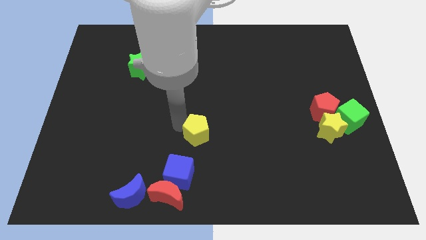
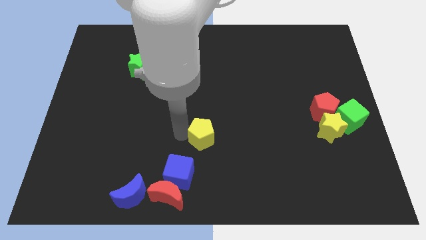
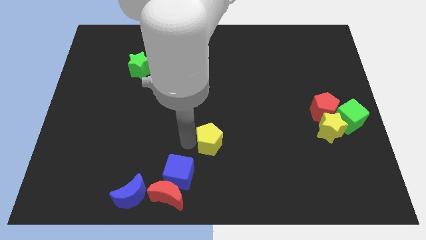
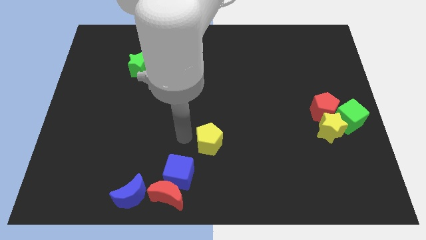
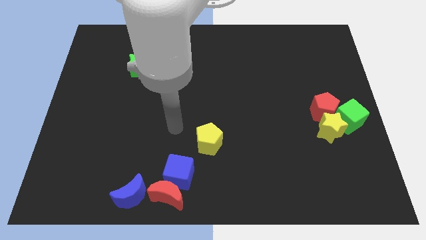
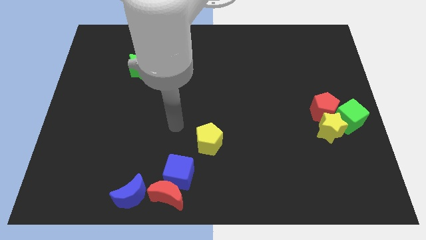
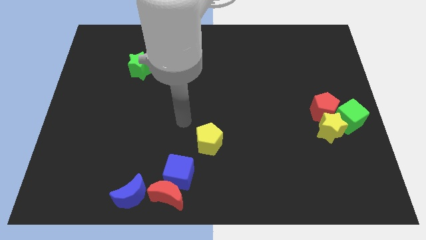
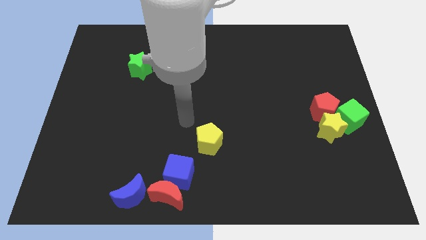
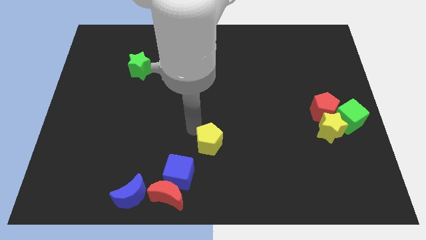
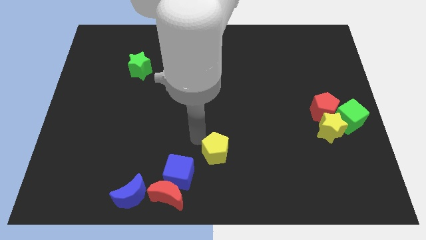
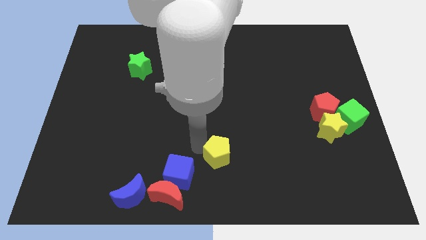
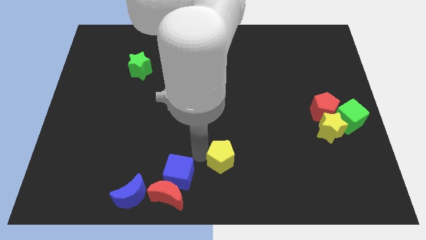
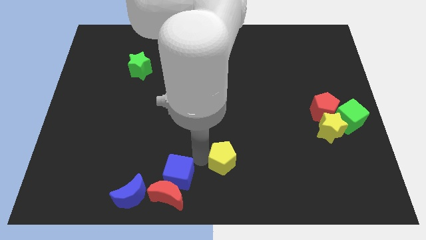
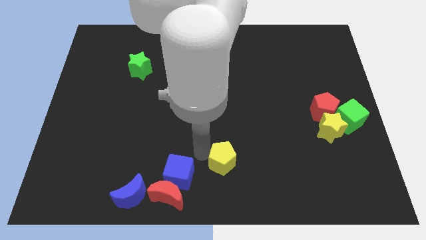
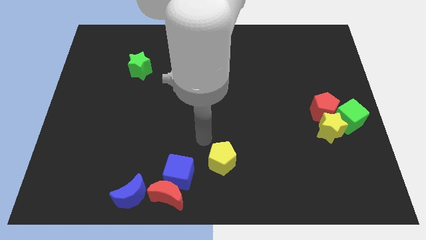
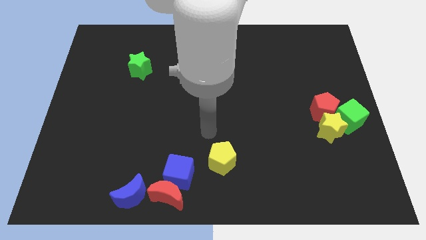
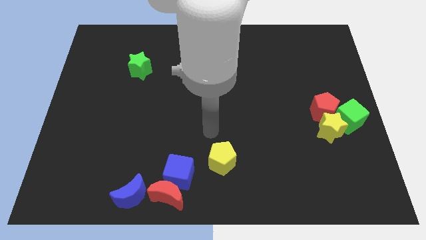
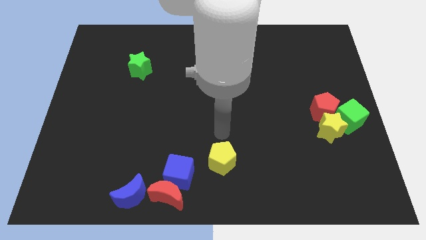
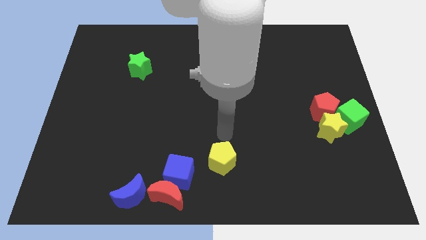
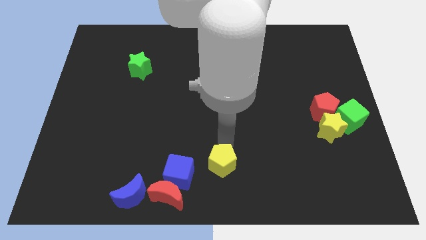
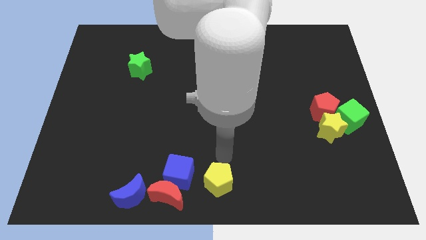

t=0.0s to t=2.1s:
place yellow pentagon adjacent to blue cube

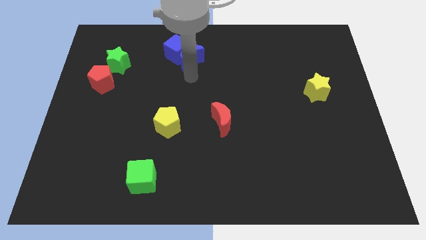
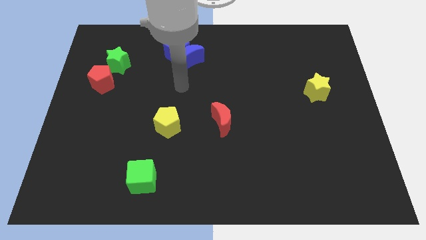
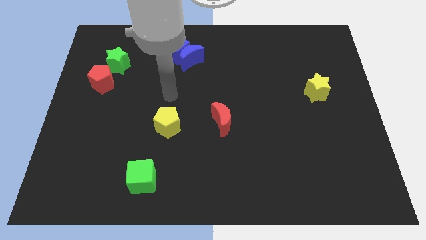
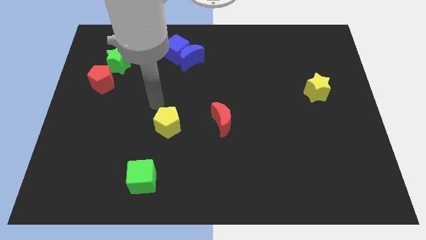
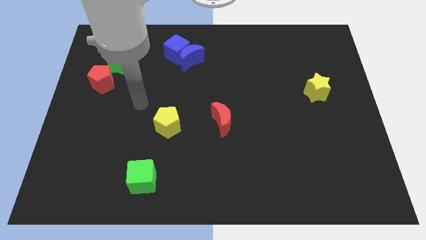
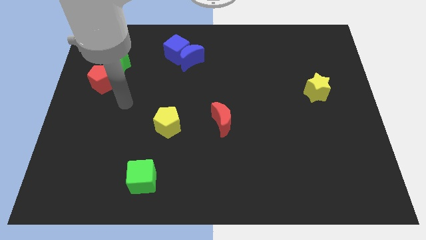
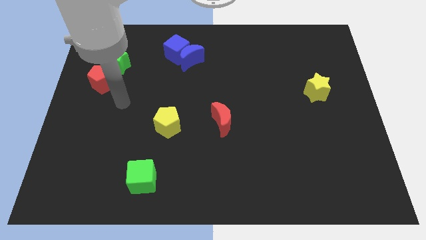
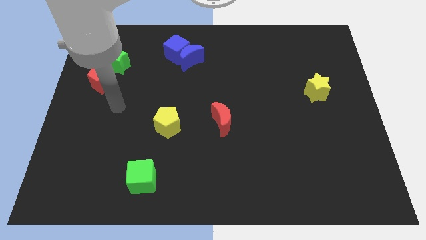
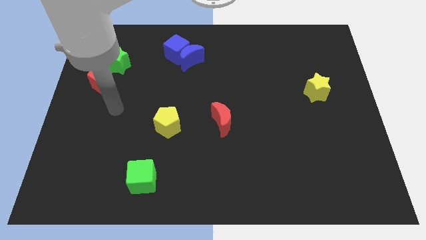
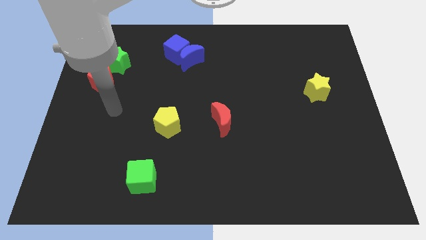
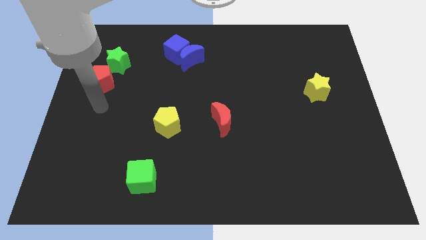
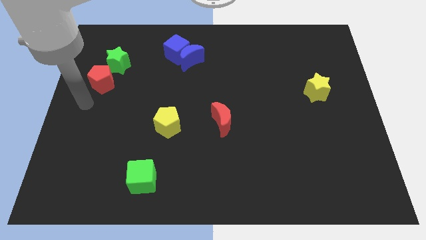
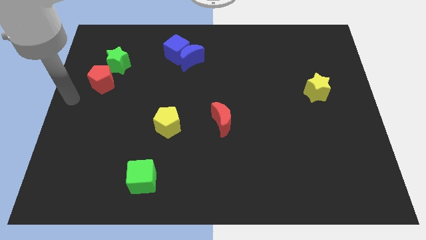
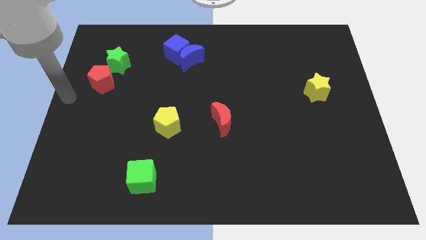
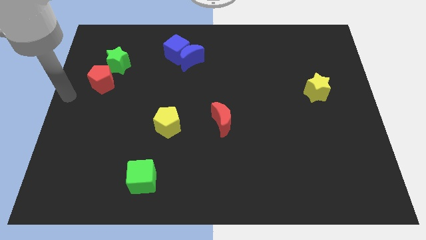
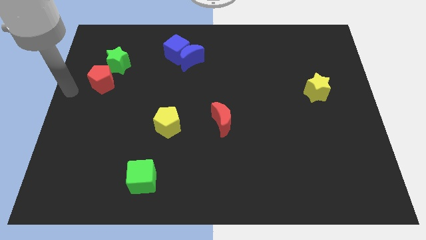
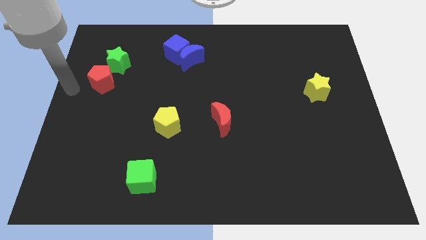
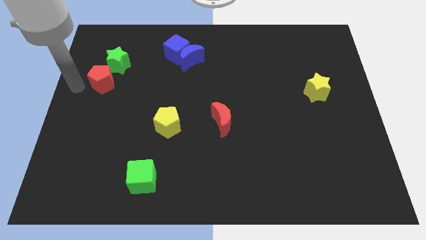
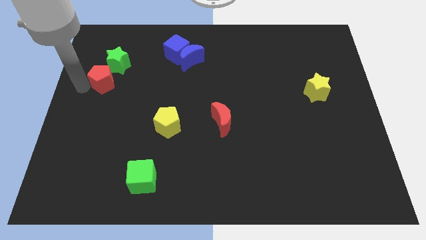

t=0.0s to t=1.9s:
move your arm towards the red pentagon

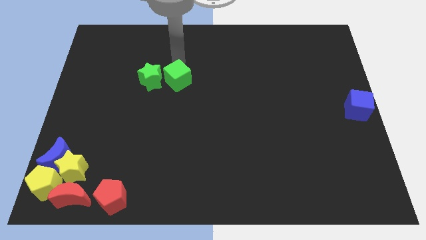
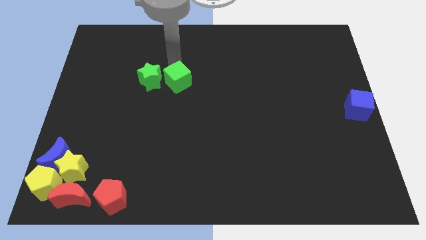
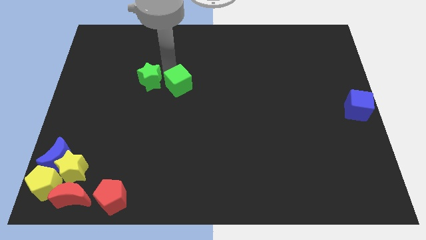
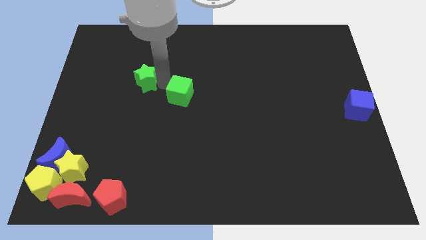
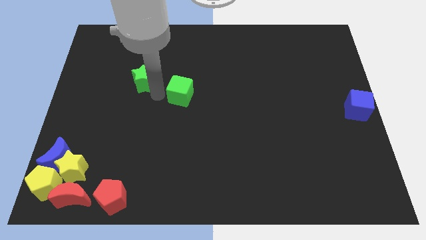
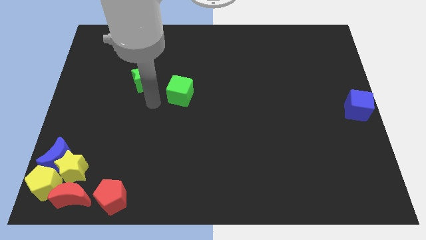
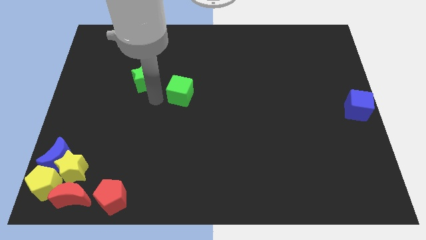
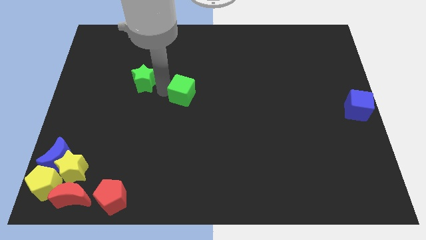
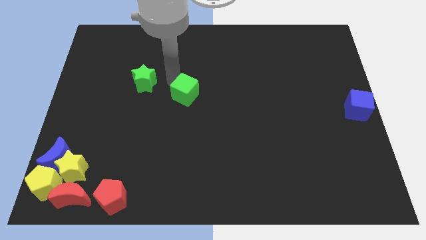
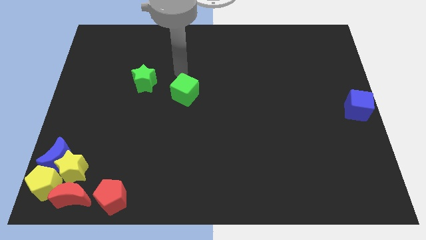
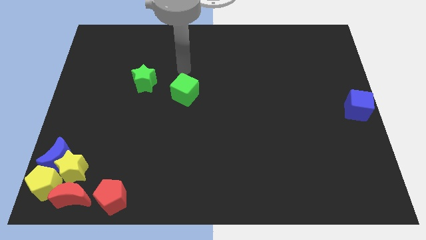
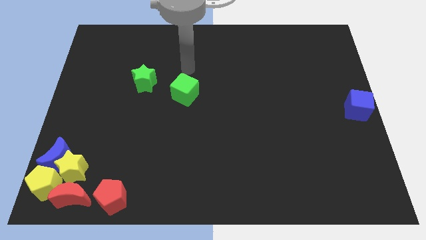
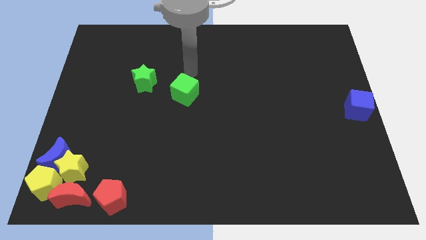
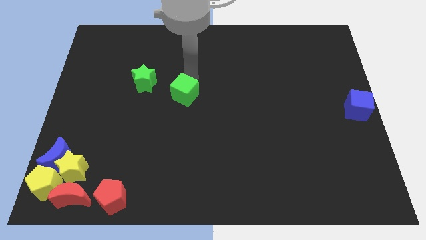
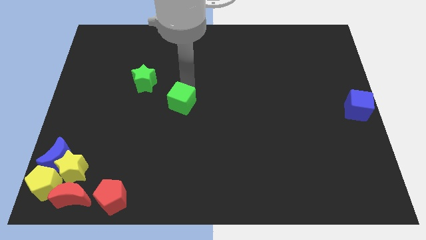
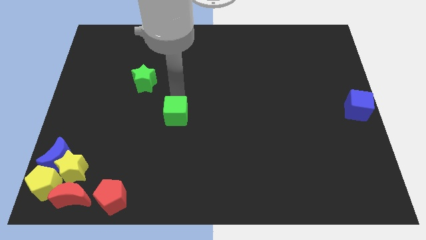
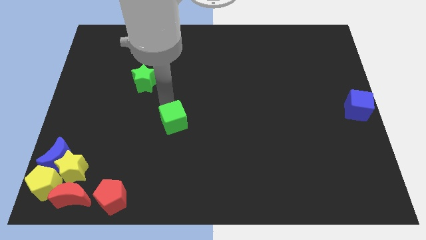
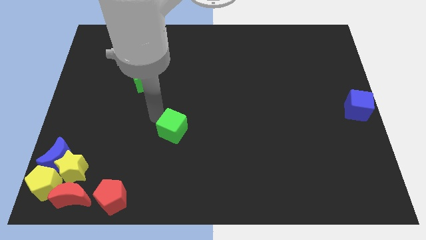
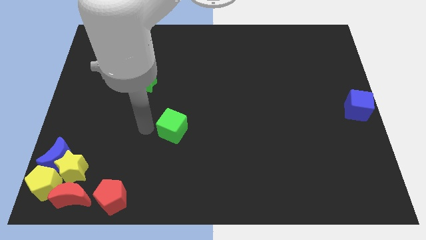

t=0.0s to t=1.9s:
move the green cube away from the green star

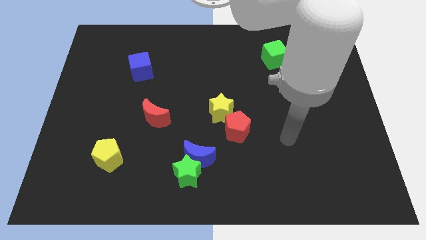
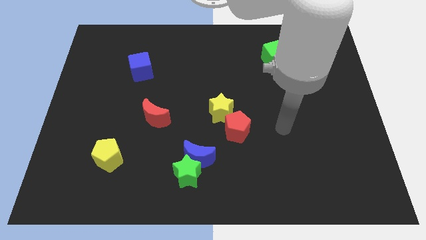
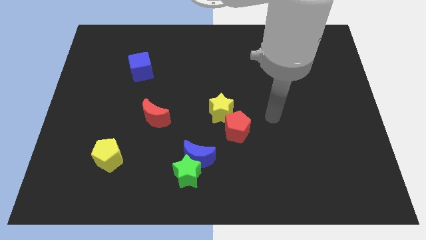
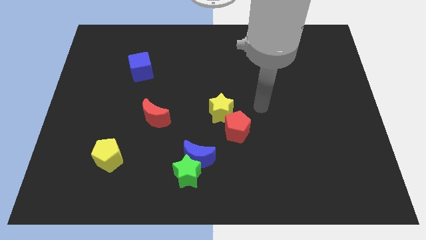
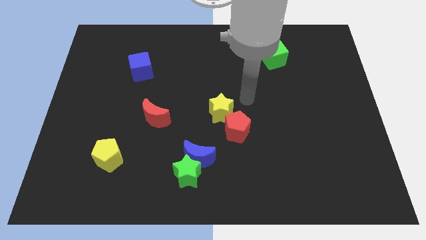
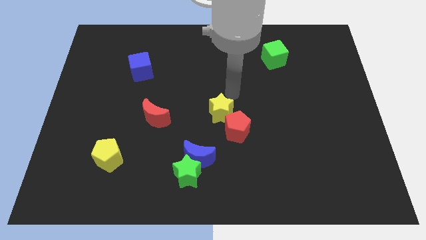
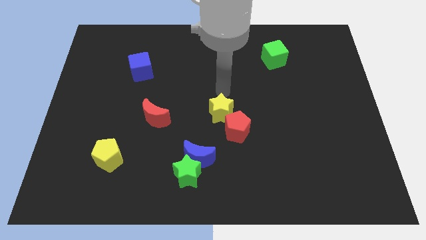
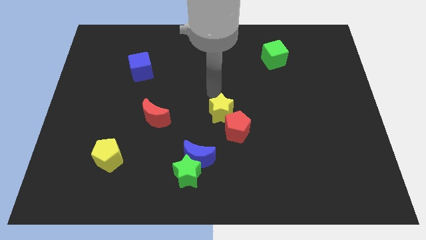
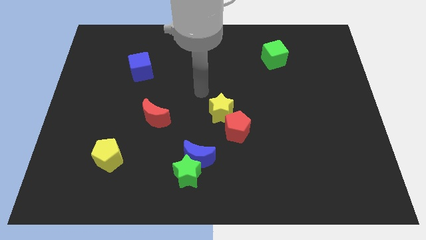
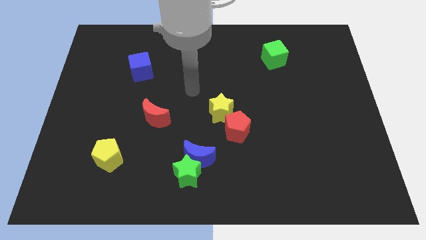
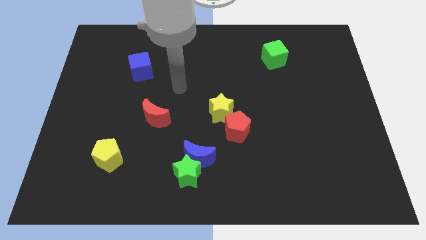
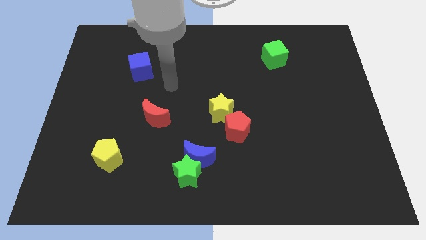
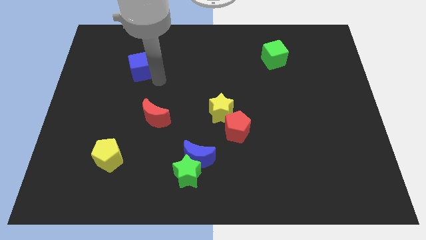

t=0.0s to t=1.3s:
move robot arm towards blue cube

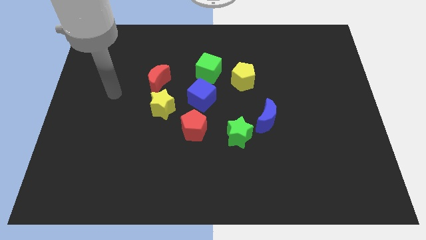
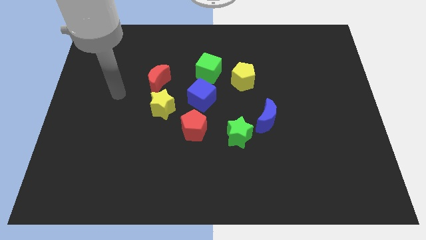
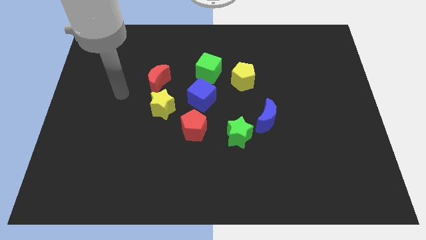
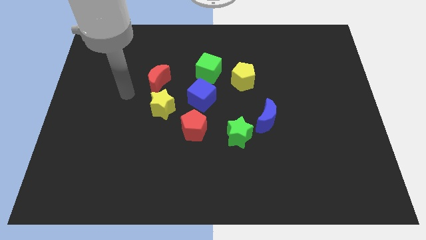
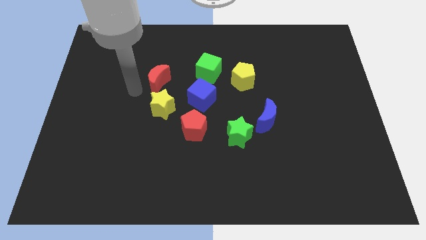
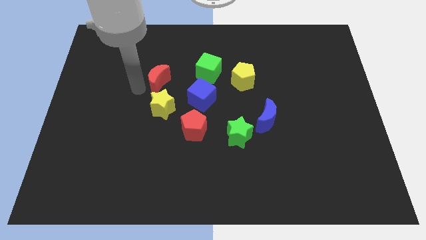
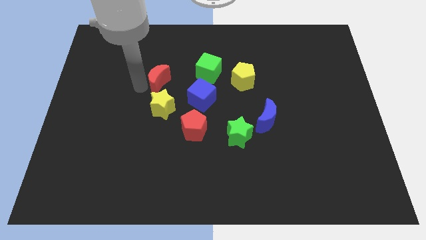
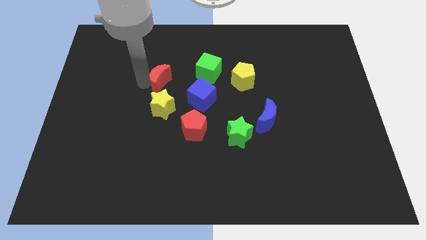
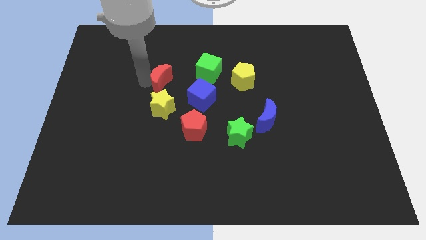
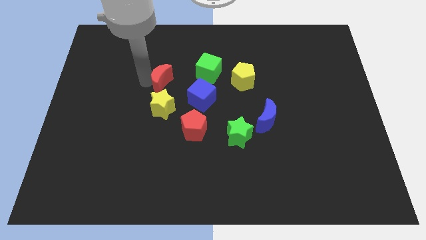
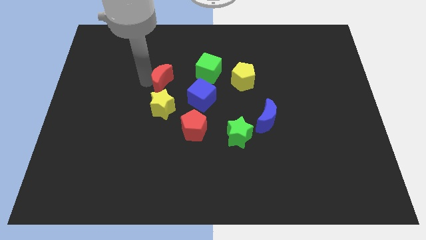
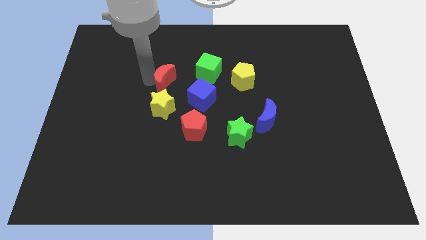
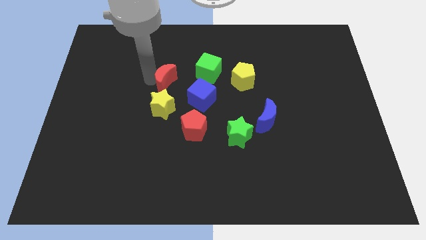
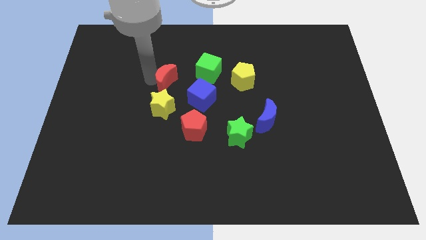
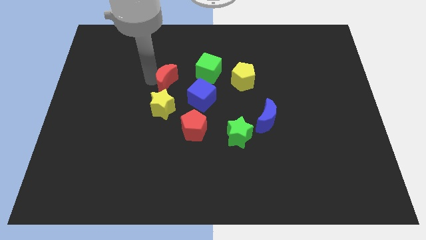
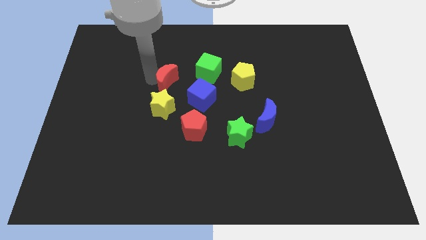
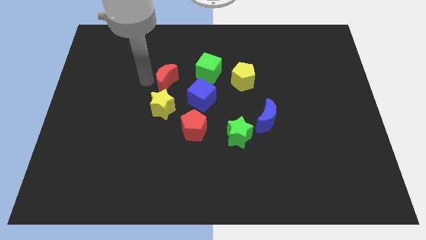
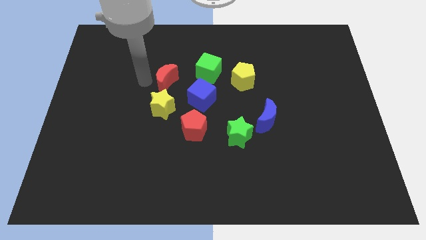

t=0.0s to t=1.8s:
slide the red crescent slightly to the right
